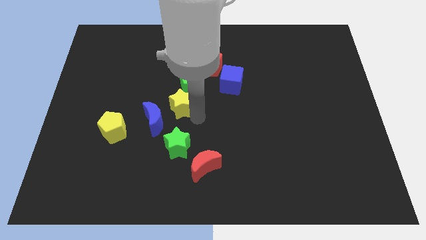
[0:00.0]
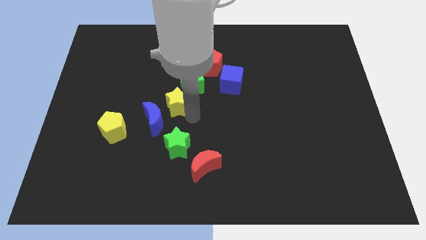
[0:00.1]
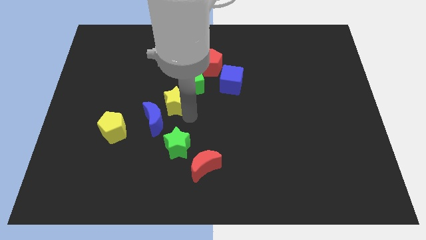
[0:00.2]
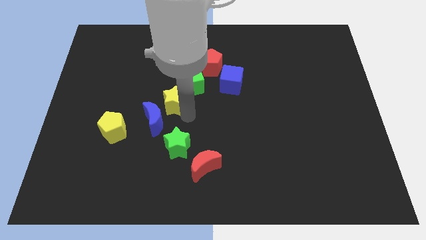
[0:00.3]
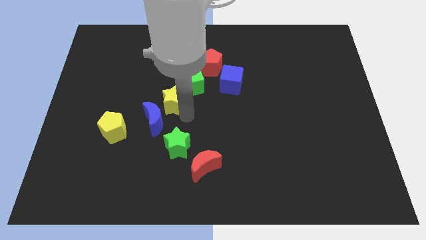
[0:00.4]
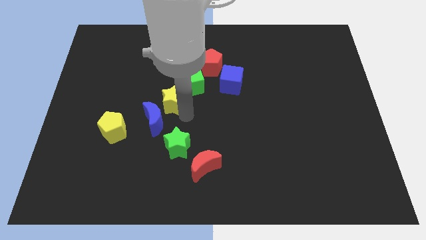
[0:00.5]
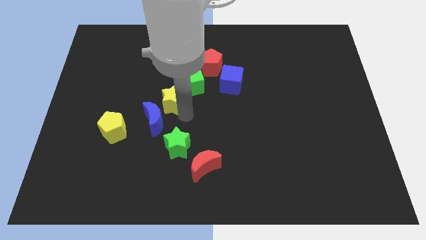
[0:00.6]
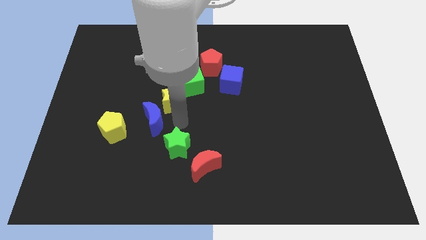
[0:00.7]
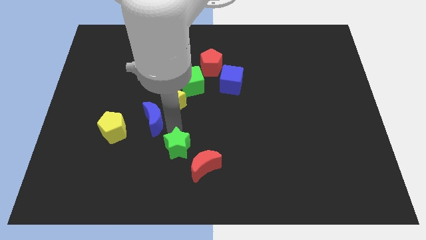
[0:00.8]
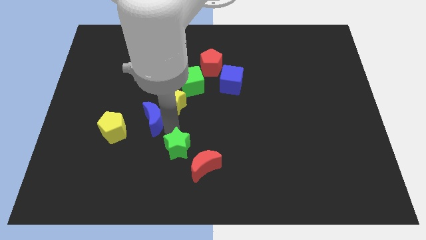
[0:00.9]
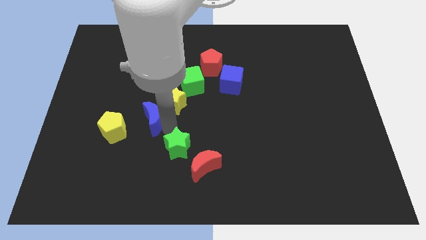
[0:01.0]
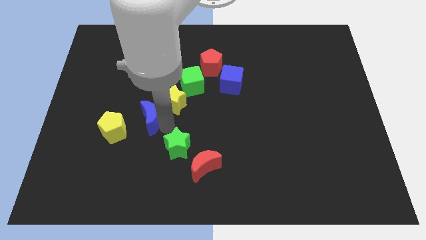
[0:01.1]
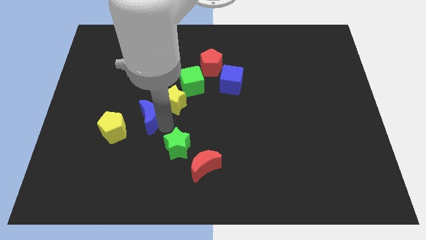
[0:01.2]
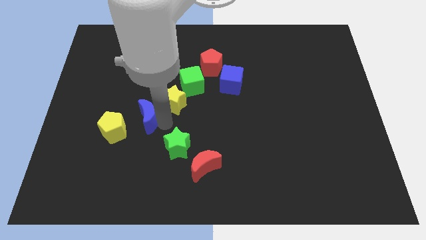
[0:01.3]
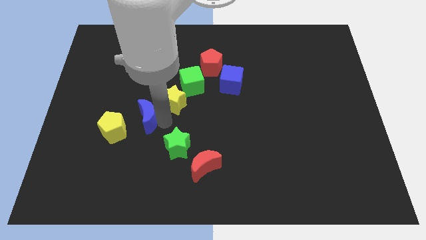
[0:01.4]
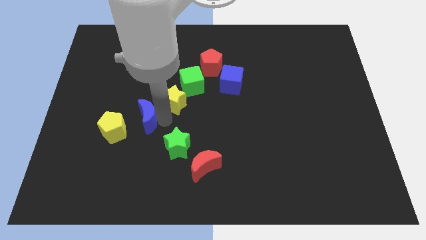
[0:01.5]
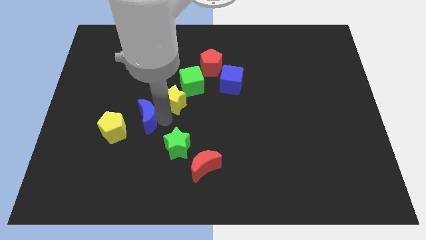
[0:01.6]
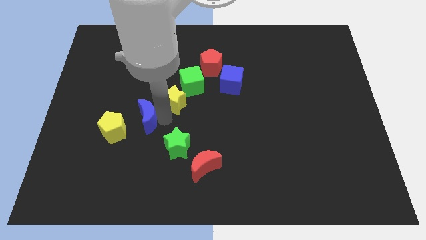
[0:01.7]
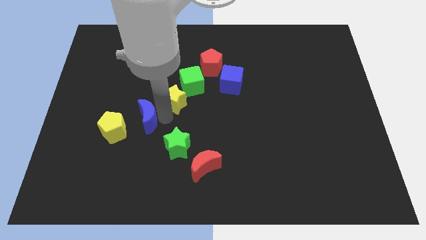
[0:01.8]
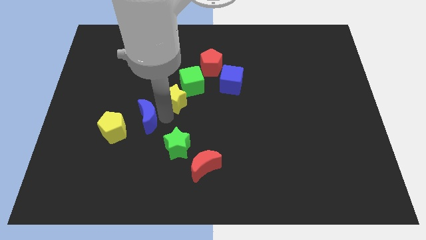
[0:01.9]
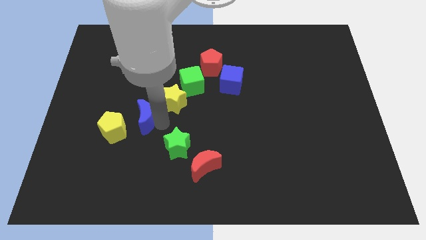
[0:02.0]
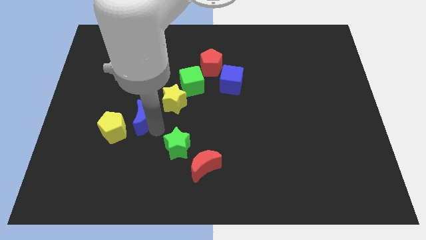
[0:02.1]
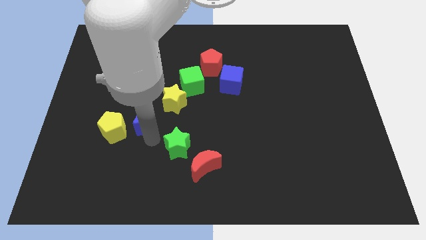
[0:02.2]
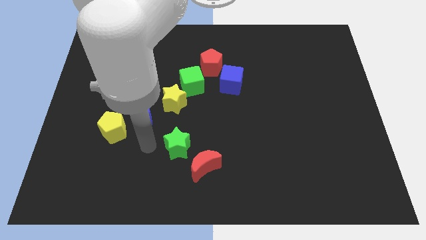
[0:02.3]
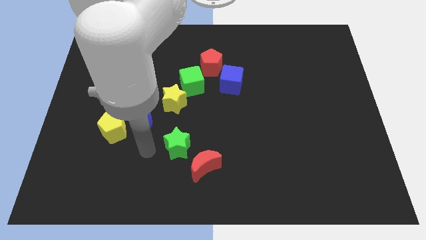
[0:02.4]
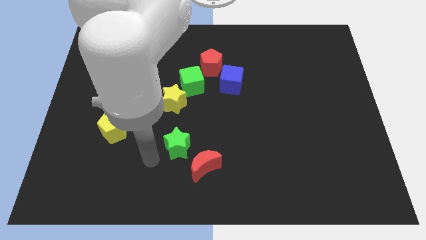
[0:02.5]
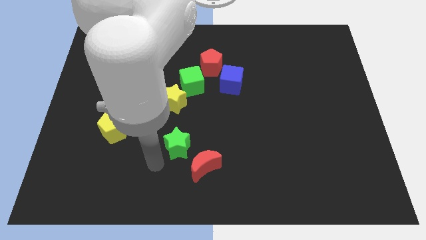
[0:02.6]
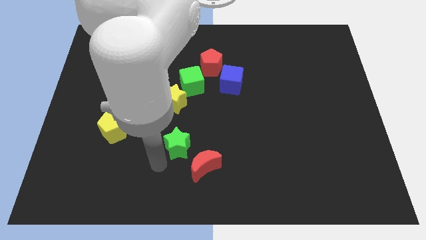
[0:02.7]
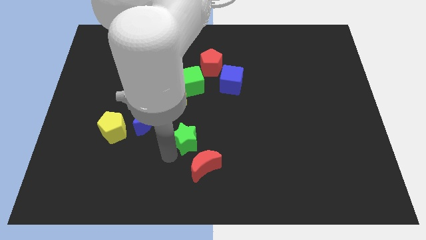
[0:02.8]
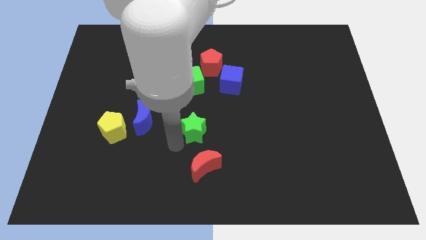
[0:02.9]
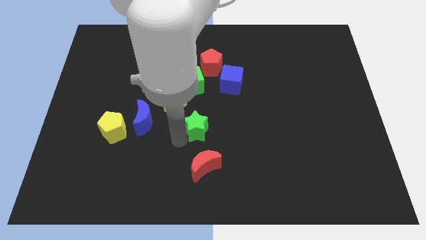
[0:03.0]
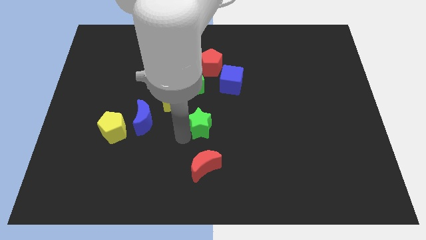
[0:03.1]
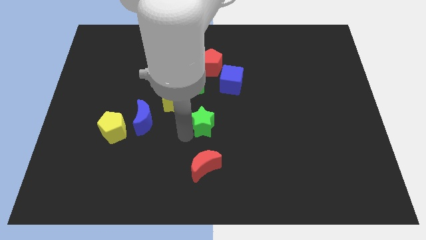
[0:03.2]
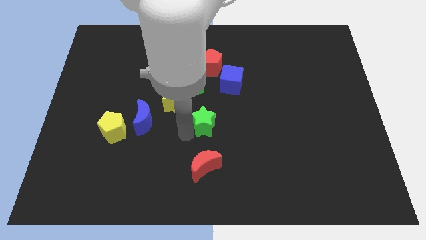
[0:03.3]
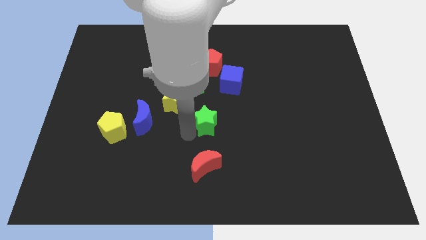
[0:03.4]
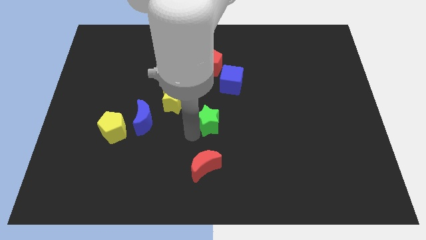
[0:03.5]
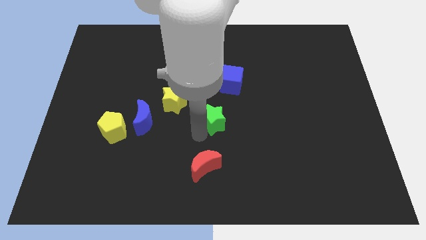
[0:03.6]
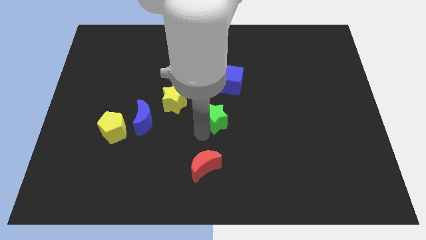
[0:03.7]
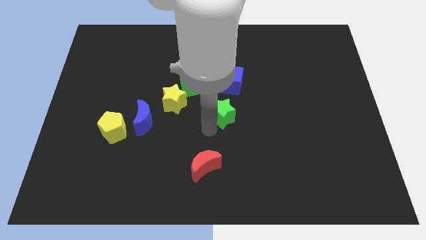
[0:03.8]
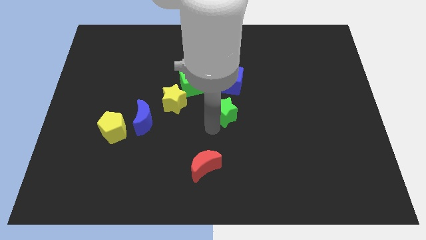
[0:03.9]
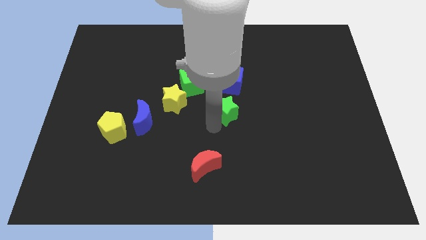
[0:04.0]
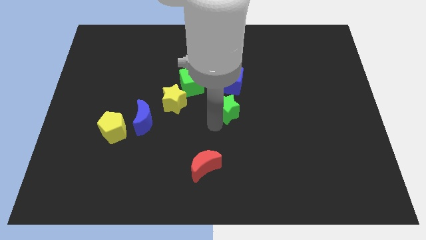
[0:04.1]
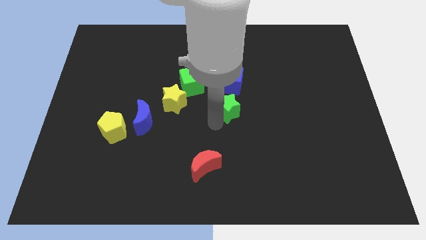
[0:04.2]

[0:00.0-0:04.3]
drag the green star to the right

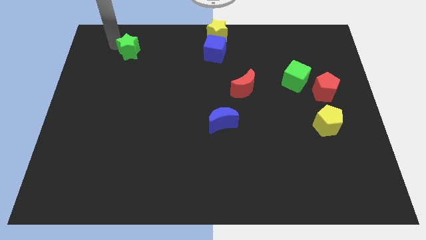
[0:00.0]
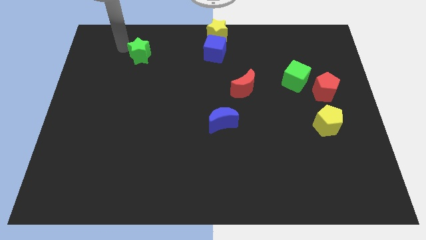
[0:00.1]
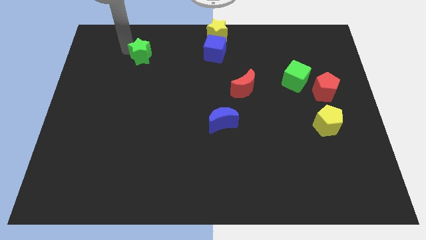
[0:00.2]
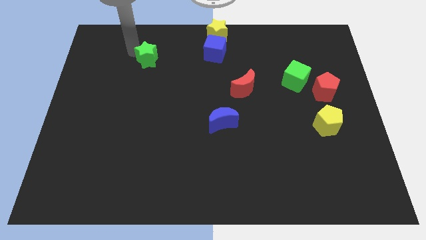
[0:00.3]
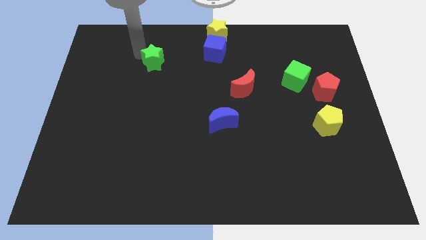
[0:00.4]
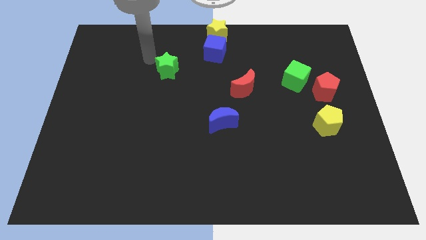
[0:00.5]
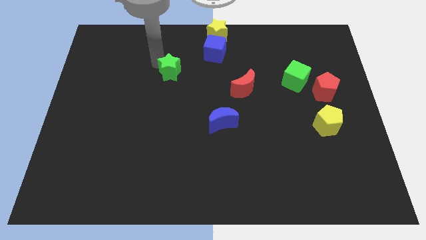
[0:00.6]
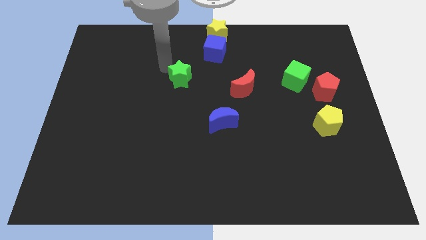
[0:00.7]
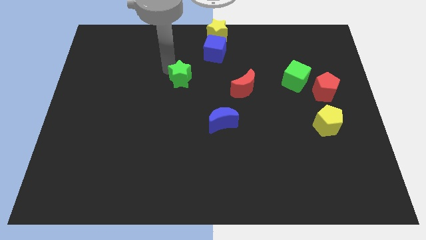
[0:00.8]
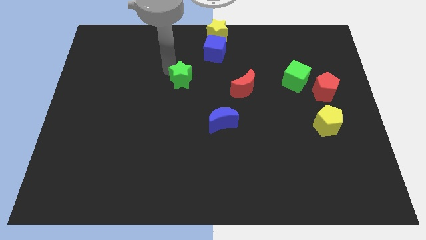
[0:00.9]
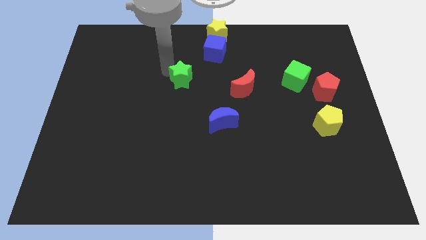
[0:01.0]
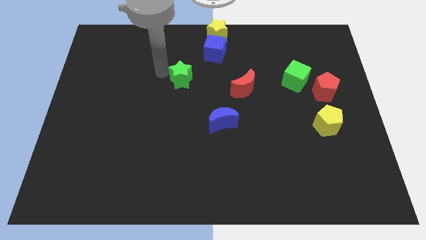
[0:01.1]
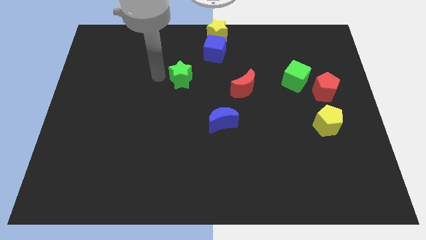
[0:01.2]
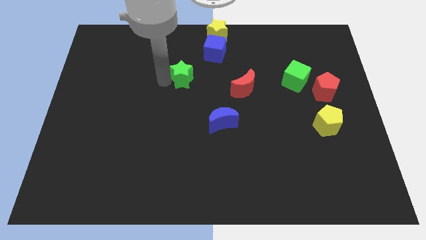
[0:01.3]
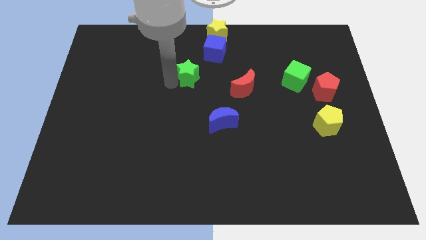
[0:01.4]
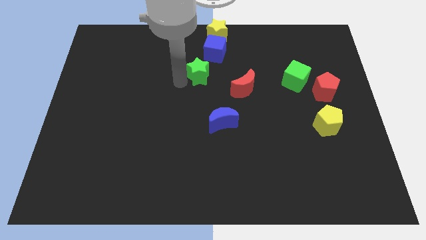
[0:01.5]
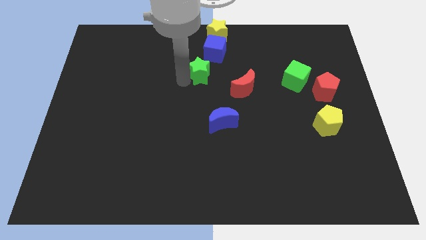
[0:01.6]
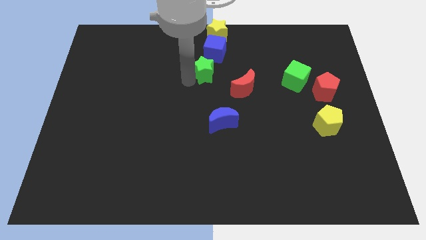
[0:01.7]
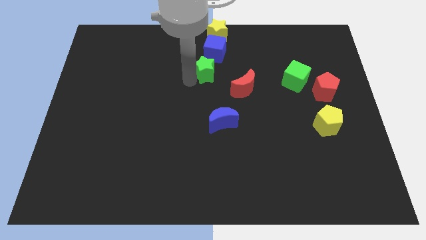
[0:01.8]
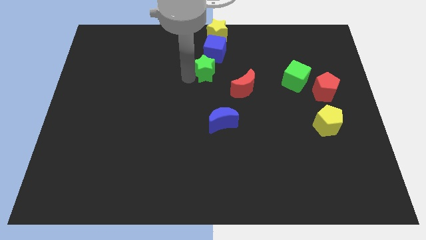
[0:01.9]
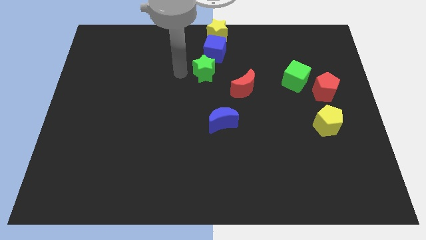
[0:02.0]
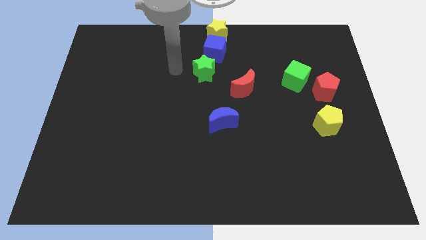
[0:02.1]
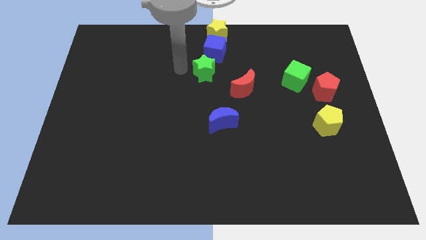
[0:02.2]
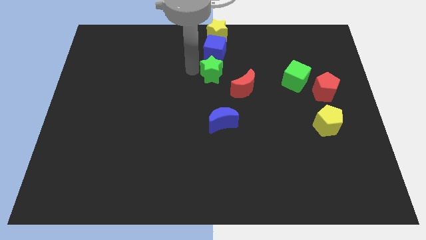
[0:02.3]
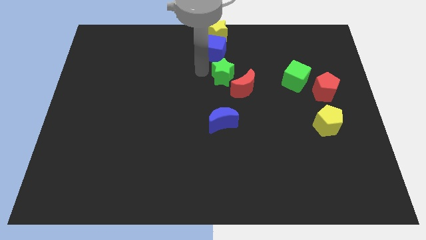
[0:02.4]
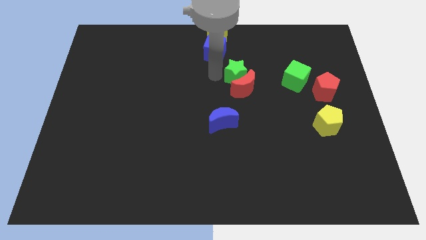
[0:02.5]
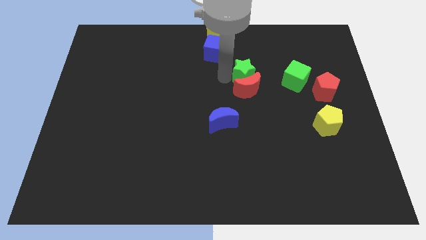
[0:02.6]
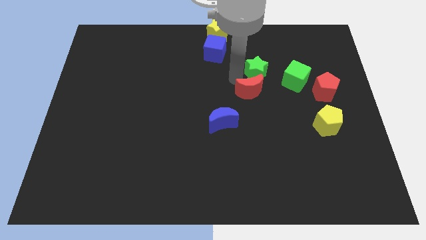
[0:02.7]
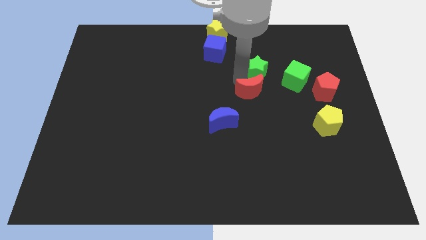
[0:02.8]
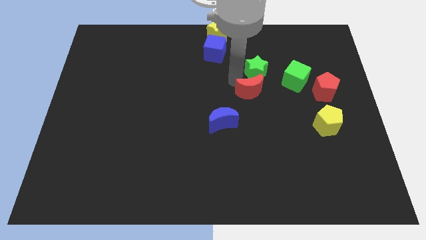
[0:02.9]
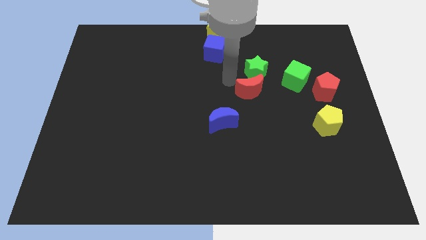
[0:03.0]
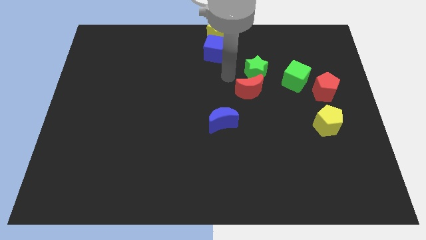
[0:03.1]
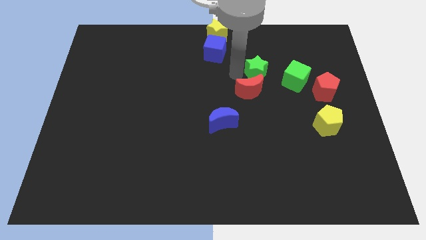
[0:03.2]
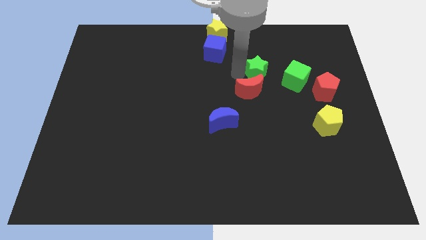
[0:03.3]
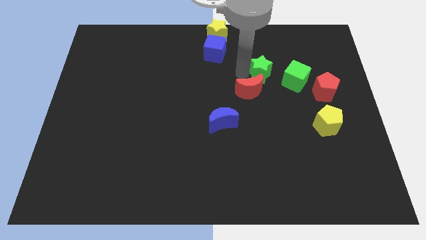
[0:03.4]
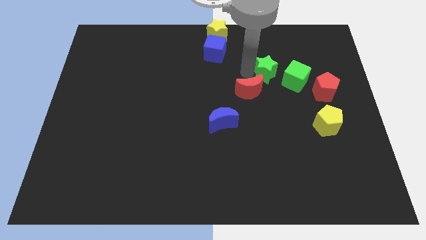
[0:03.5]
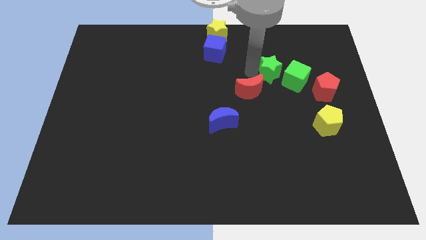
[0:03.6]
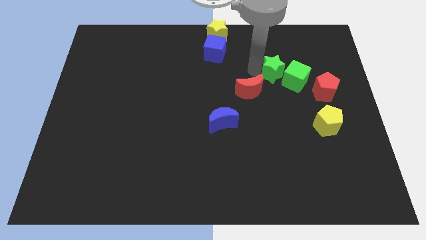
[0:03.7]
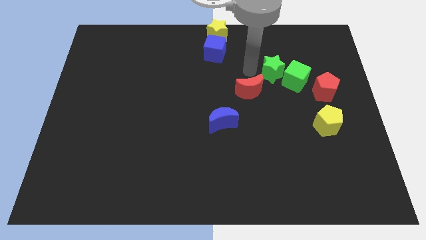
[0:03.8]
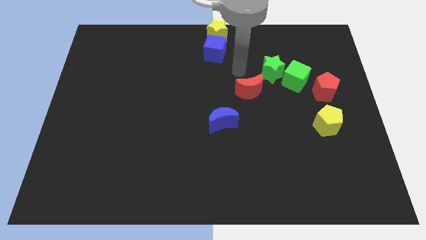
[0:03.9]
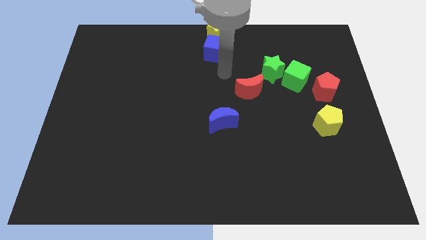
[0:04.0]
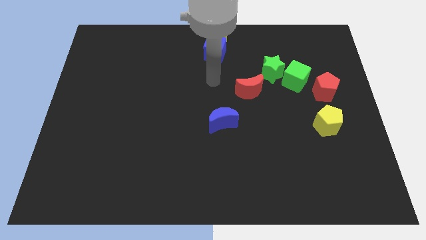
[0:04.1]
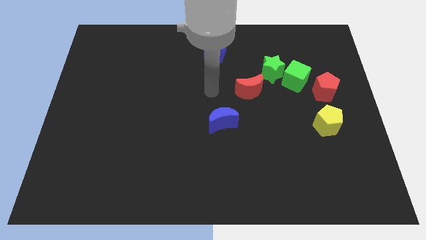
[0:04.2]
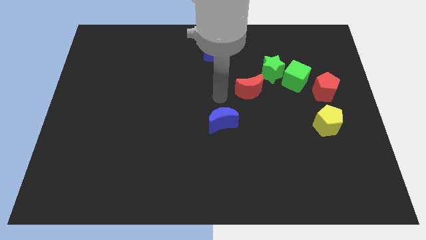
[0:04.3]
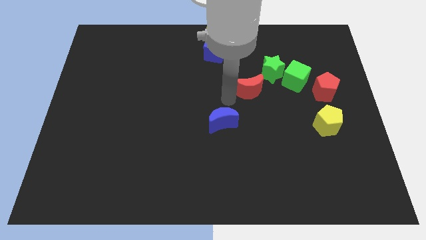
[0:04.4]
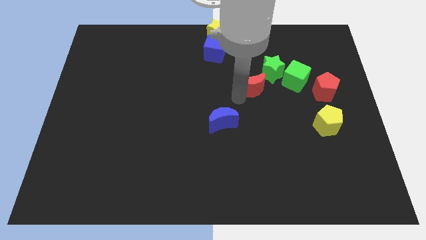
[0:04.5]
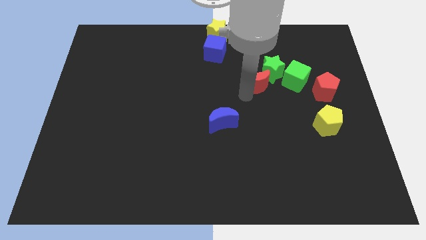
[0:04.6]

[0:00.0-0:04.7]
push the green star into the green cube
